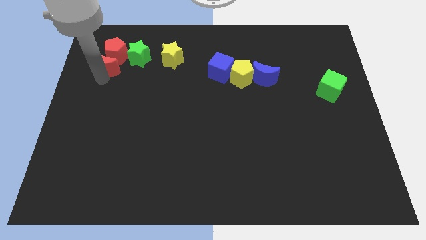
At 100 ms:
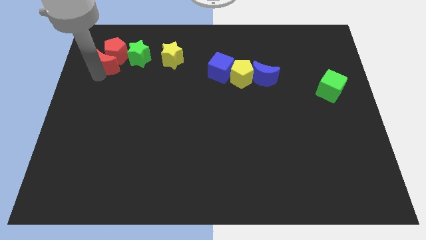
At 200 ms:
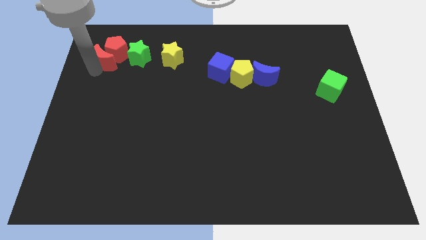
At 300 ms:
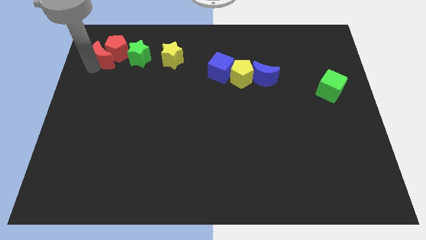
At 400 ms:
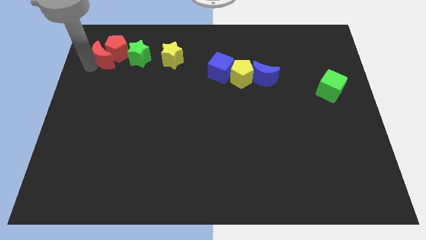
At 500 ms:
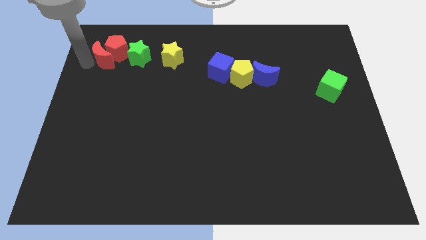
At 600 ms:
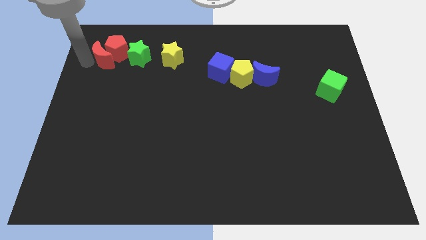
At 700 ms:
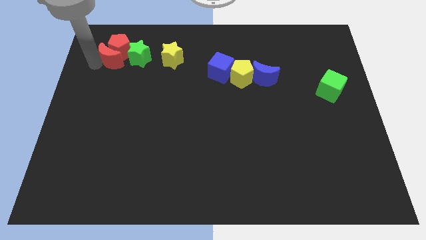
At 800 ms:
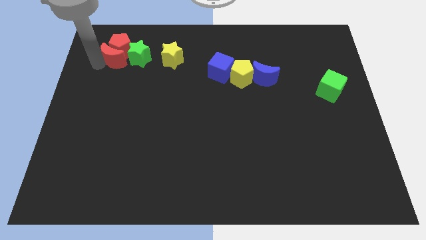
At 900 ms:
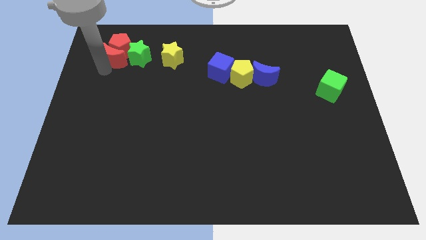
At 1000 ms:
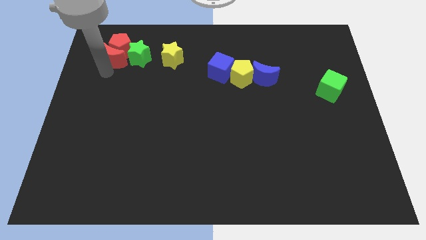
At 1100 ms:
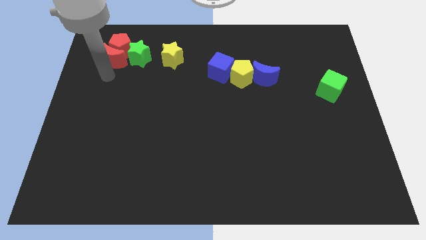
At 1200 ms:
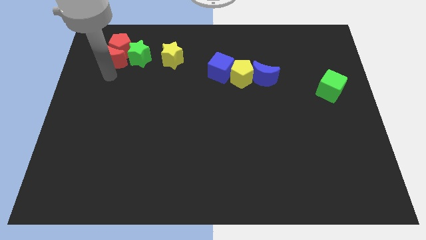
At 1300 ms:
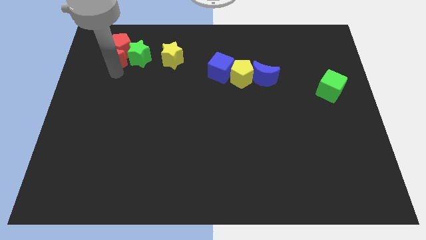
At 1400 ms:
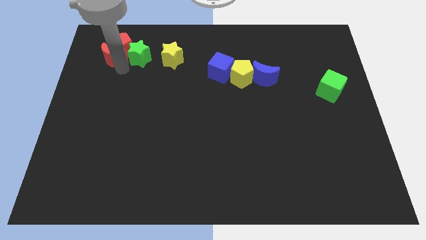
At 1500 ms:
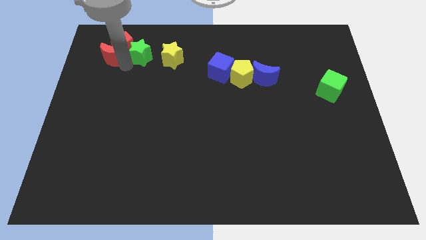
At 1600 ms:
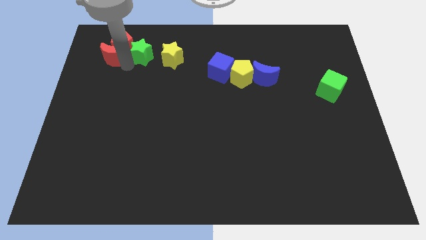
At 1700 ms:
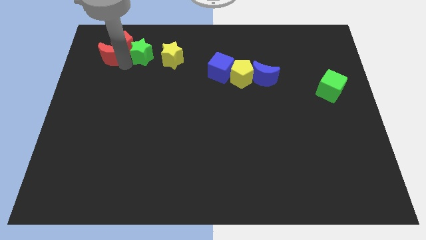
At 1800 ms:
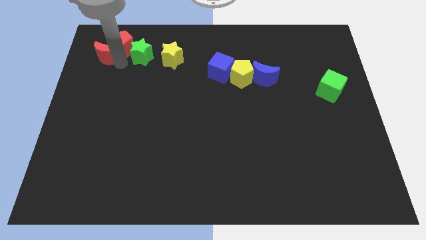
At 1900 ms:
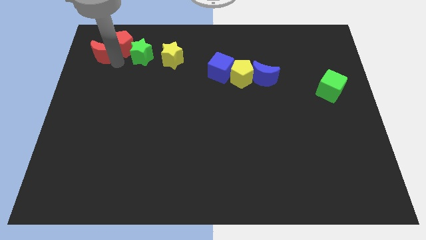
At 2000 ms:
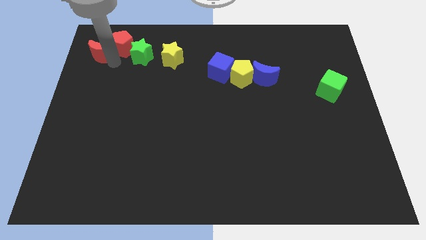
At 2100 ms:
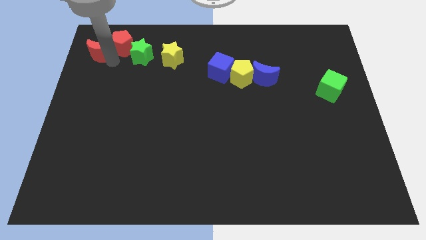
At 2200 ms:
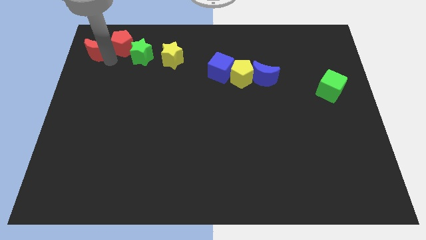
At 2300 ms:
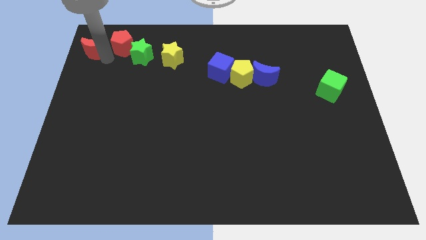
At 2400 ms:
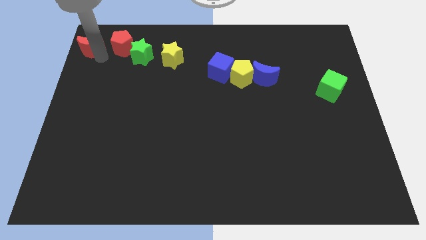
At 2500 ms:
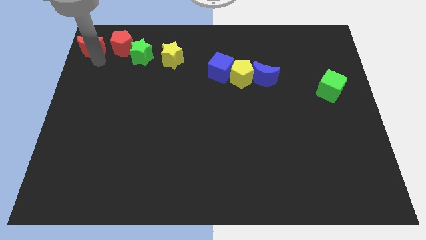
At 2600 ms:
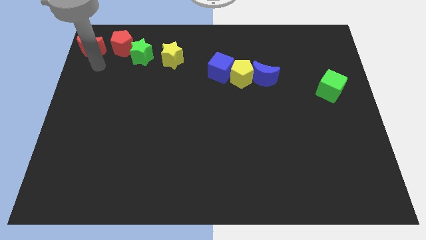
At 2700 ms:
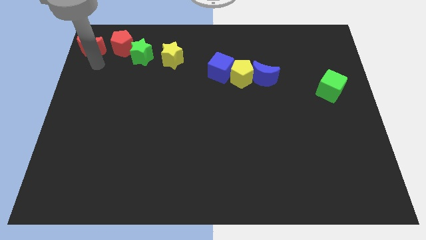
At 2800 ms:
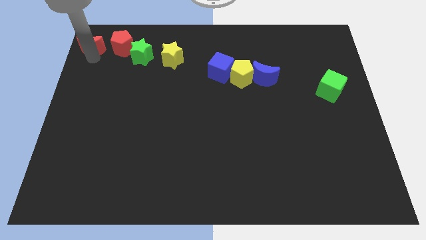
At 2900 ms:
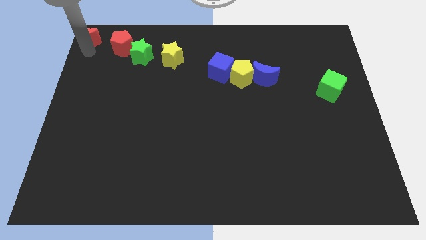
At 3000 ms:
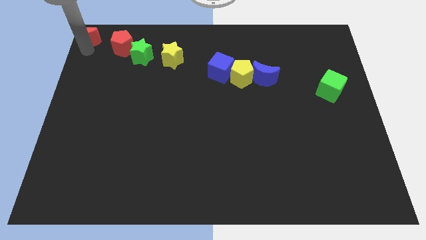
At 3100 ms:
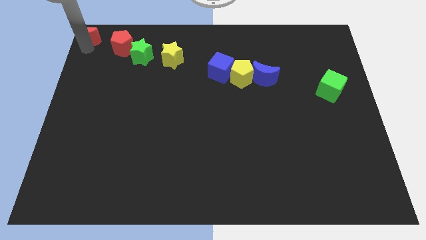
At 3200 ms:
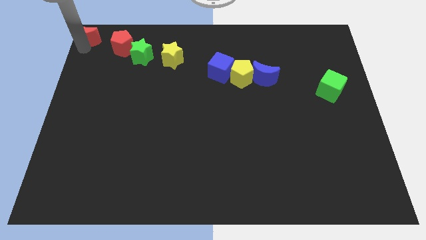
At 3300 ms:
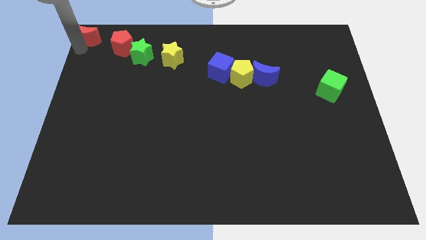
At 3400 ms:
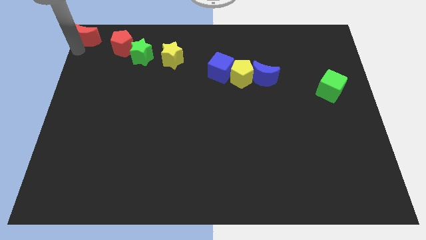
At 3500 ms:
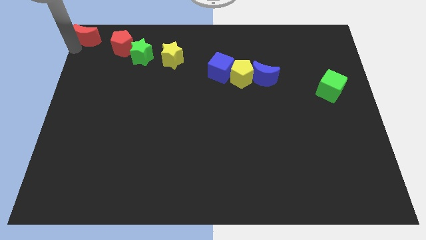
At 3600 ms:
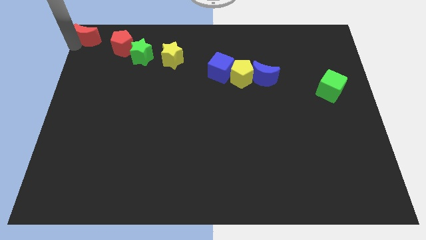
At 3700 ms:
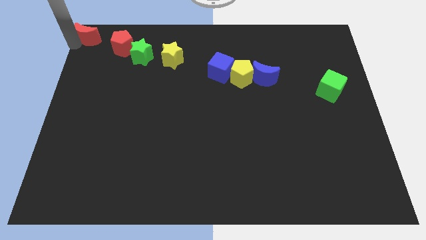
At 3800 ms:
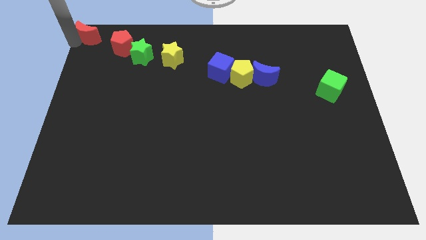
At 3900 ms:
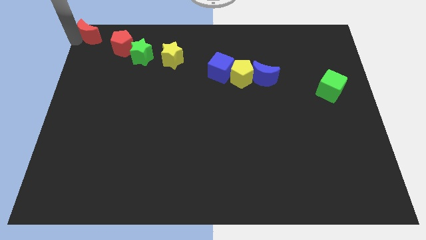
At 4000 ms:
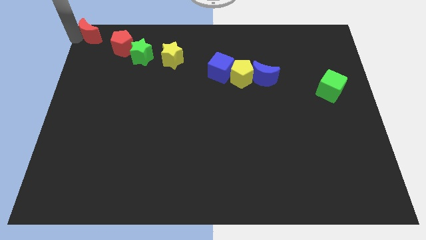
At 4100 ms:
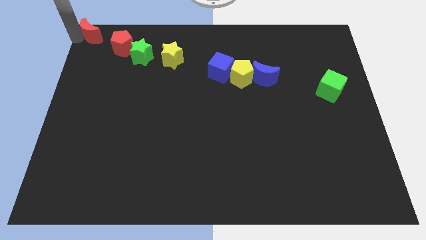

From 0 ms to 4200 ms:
push red moon to the top left corner

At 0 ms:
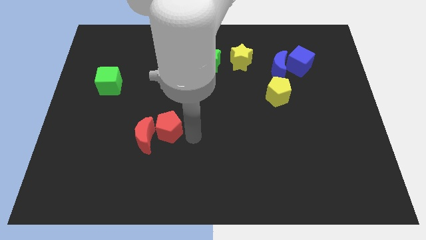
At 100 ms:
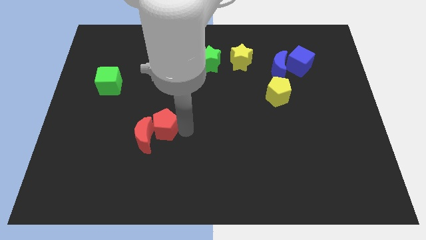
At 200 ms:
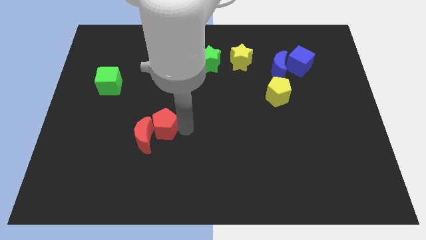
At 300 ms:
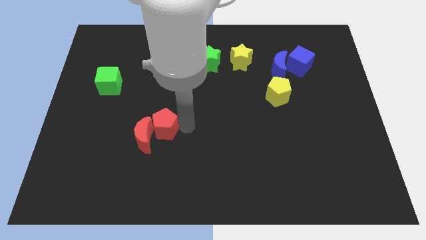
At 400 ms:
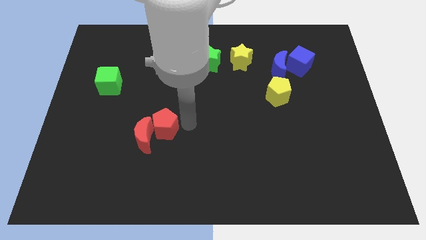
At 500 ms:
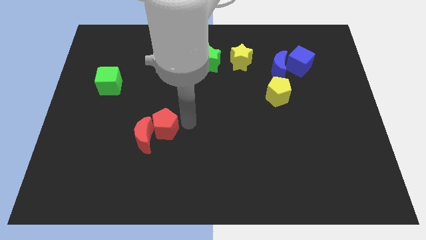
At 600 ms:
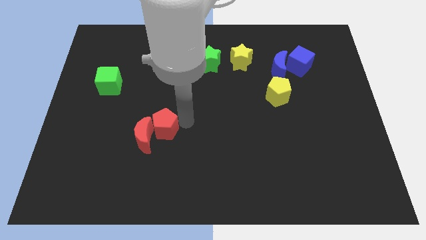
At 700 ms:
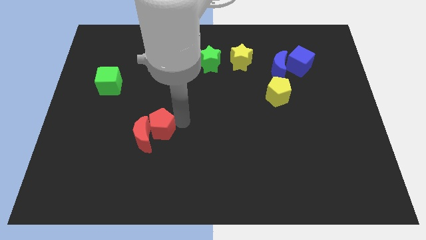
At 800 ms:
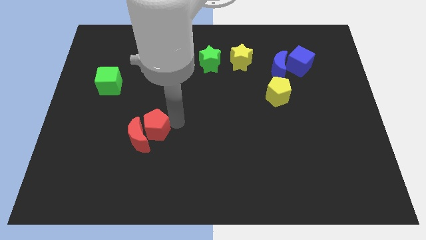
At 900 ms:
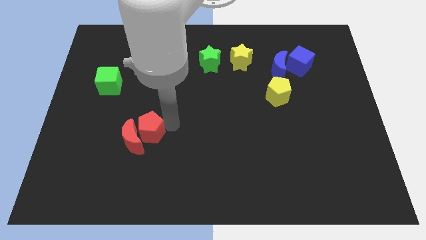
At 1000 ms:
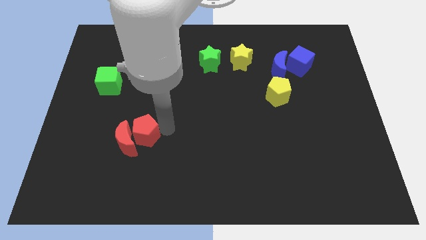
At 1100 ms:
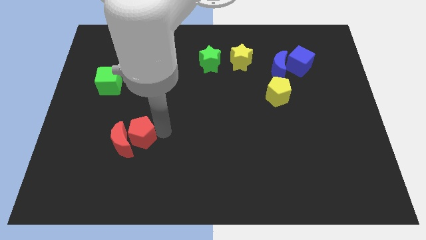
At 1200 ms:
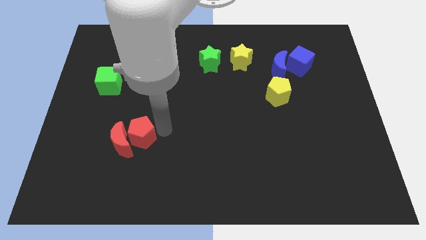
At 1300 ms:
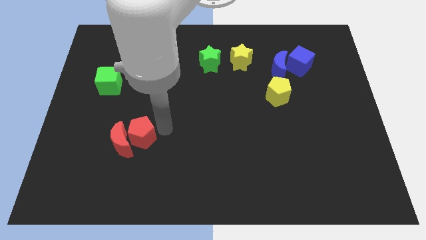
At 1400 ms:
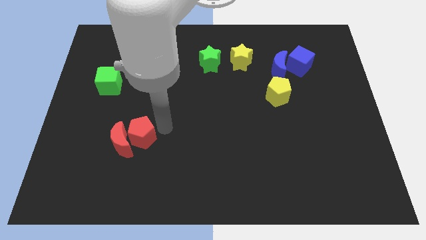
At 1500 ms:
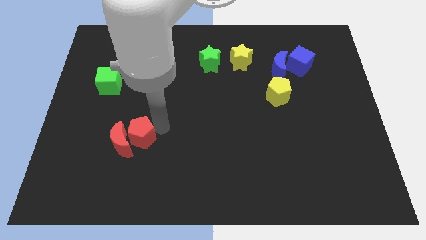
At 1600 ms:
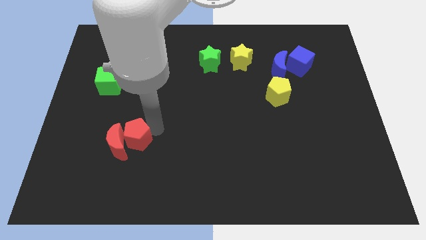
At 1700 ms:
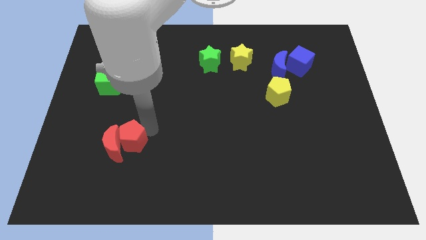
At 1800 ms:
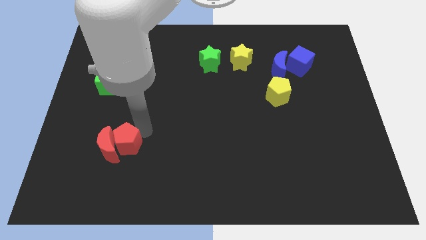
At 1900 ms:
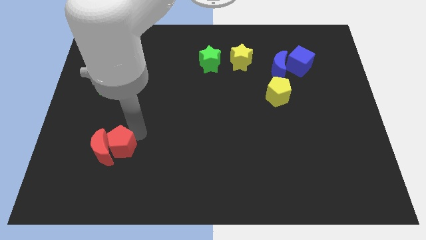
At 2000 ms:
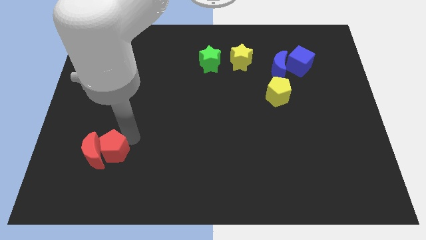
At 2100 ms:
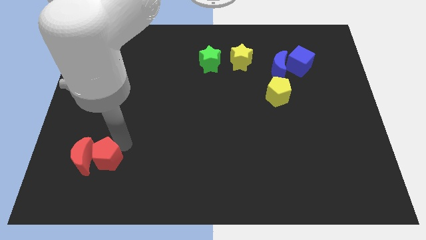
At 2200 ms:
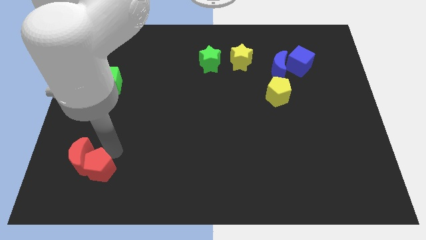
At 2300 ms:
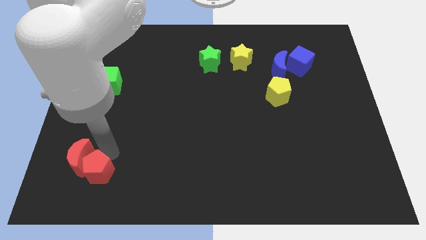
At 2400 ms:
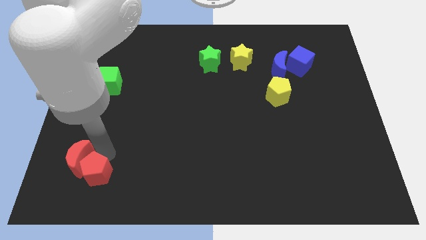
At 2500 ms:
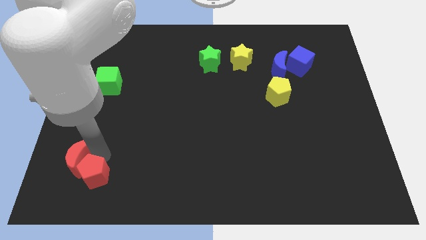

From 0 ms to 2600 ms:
push the red pentagon into the red moon

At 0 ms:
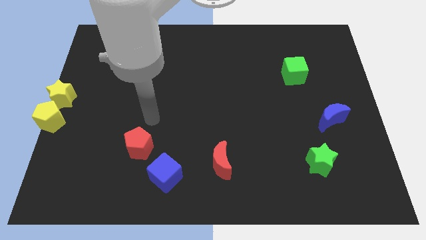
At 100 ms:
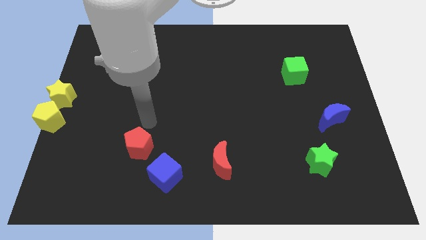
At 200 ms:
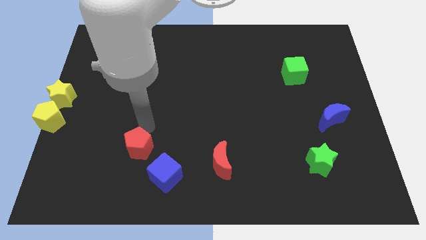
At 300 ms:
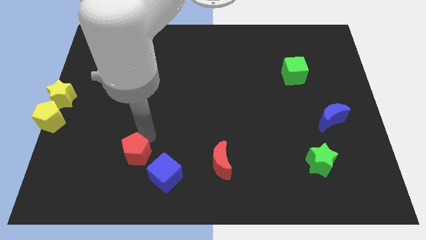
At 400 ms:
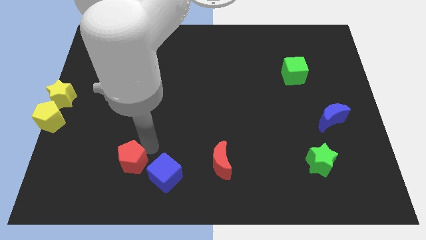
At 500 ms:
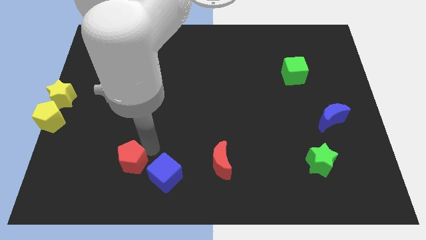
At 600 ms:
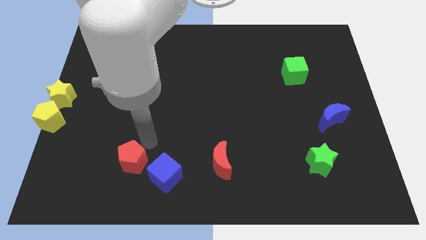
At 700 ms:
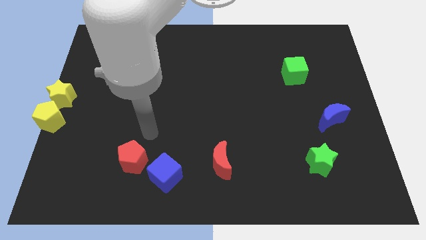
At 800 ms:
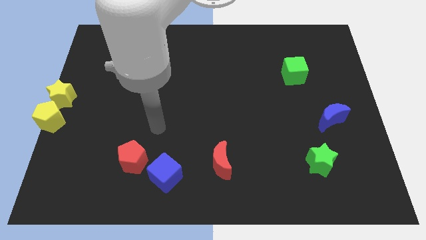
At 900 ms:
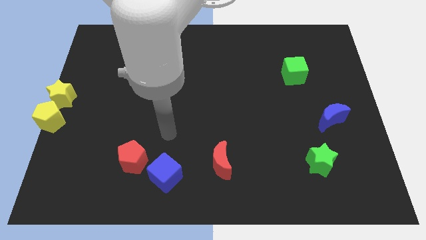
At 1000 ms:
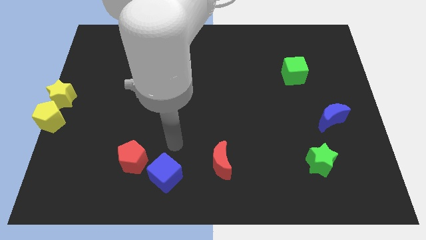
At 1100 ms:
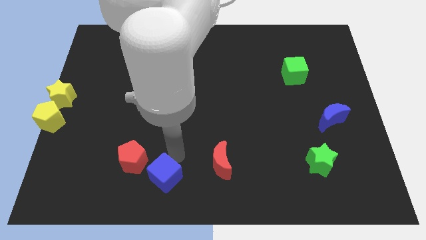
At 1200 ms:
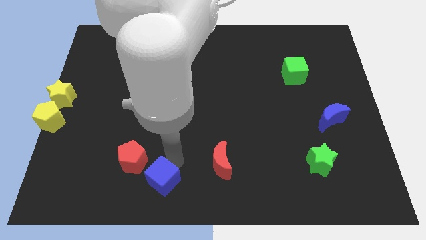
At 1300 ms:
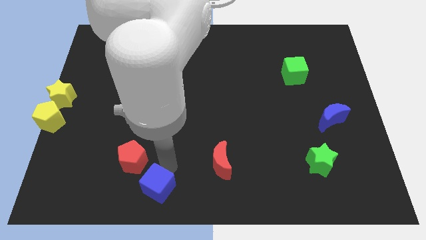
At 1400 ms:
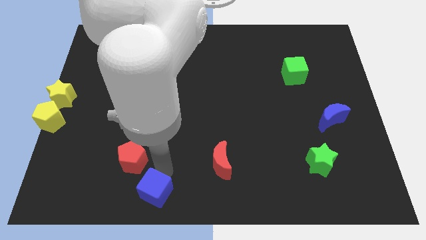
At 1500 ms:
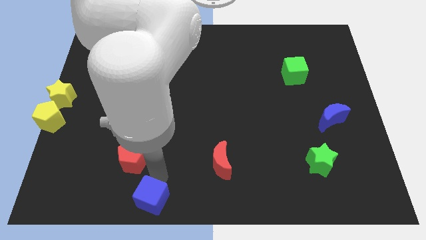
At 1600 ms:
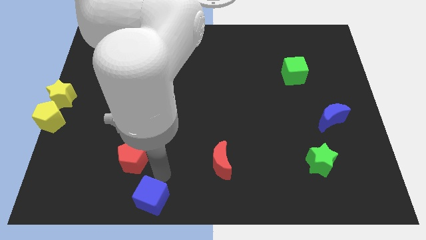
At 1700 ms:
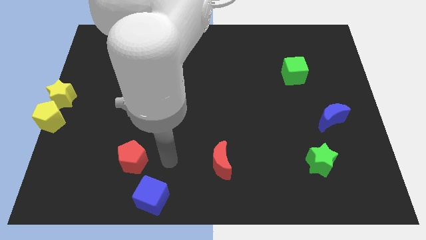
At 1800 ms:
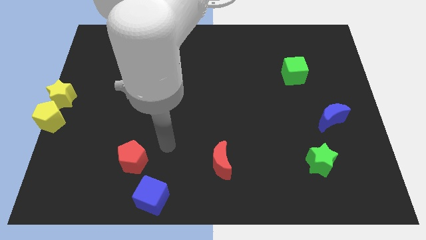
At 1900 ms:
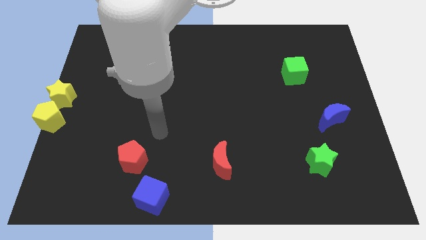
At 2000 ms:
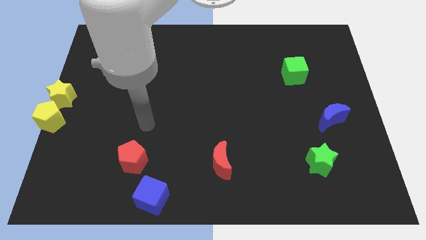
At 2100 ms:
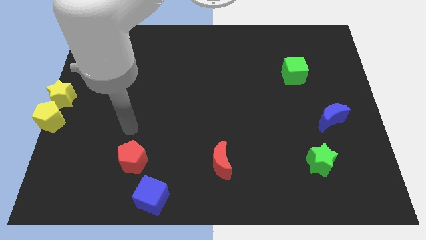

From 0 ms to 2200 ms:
slide the blue cube towards the bottom side of the board
